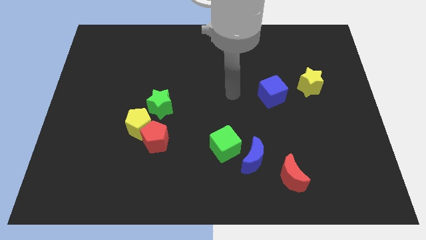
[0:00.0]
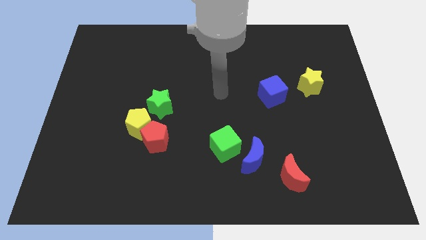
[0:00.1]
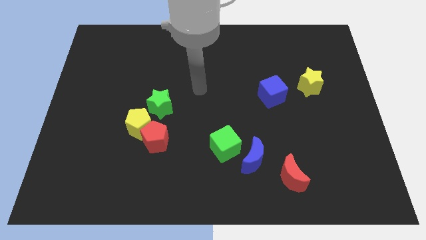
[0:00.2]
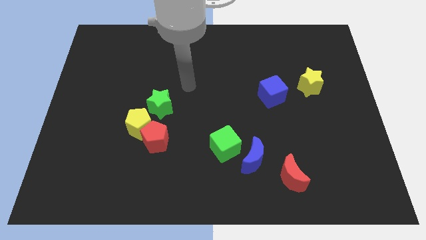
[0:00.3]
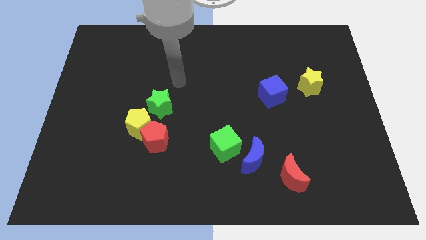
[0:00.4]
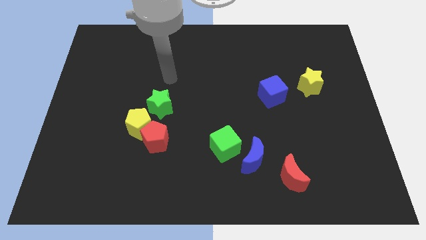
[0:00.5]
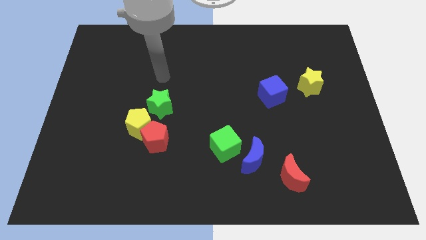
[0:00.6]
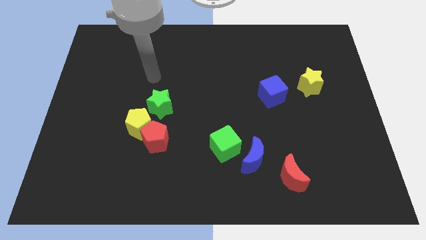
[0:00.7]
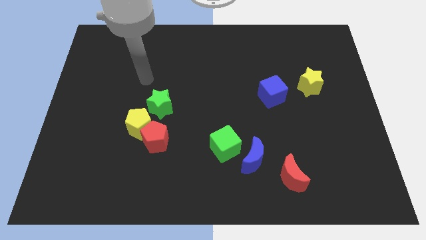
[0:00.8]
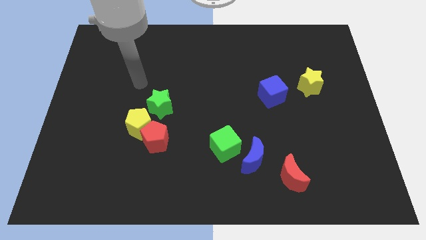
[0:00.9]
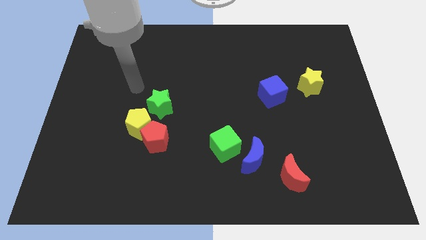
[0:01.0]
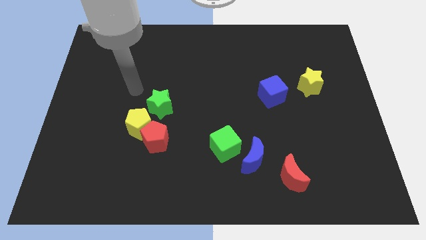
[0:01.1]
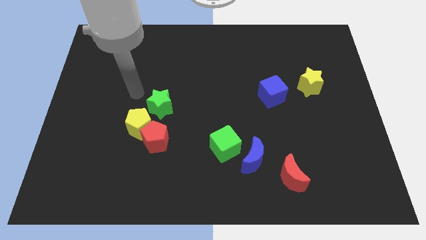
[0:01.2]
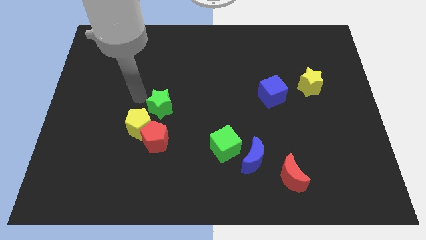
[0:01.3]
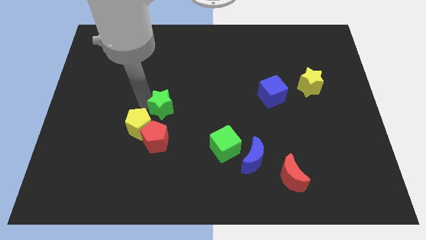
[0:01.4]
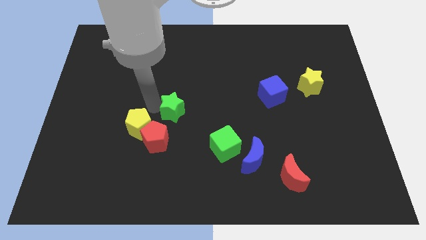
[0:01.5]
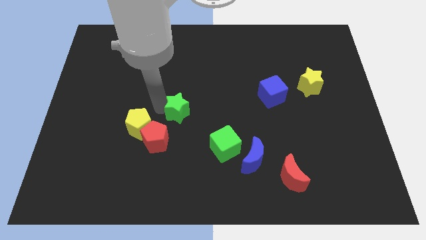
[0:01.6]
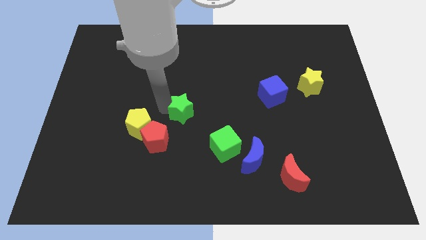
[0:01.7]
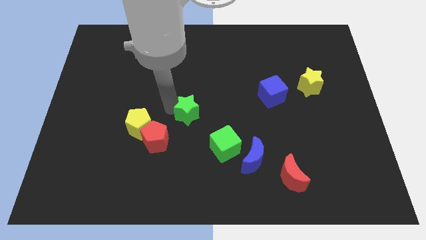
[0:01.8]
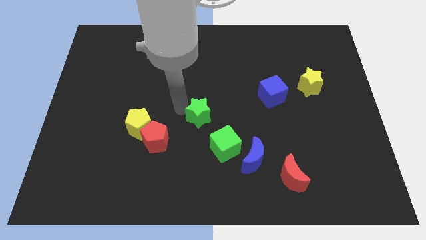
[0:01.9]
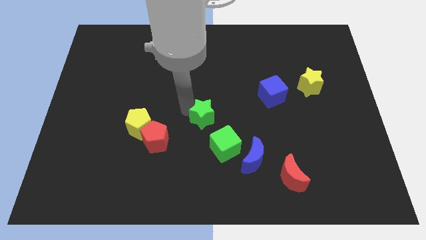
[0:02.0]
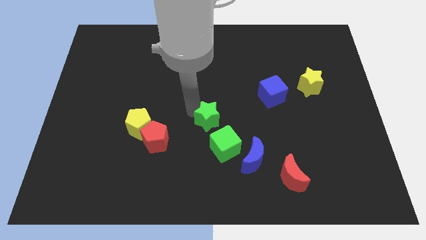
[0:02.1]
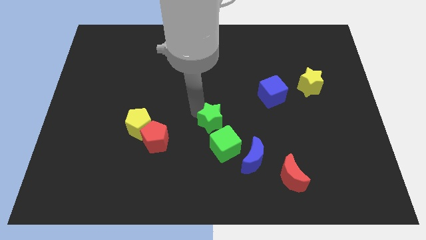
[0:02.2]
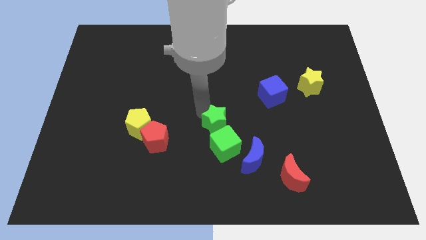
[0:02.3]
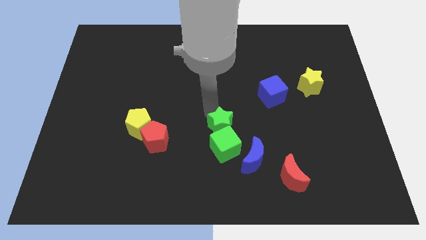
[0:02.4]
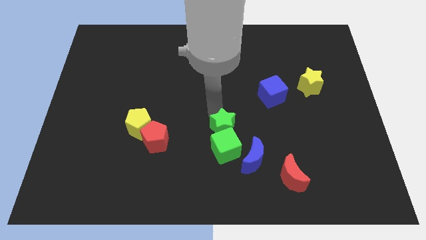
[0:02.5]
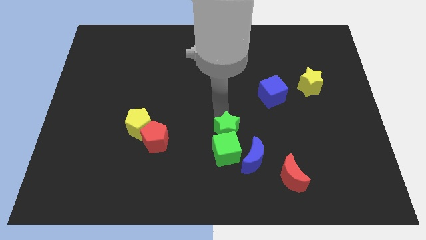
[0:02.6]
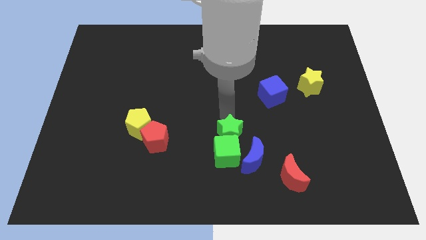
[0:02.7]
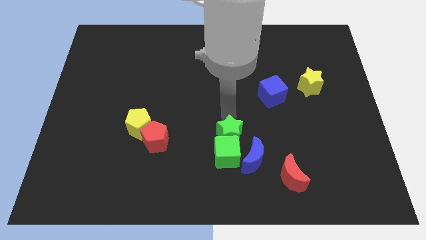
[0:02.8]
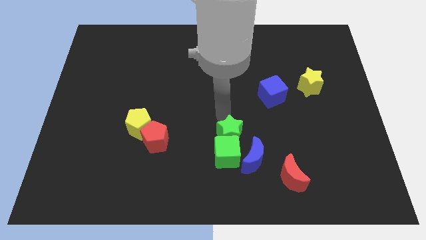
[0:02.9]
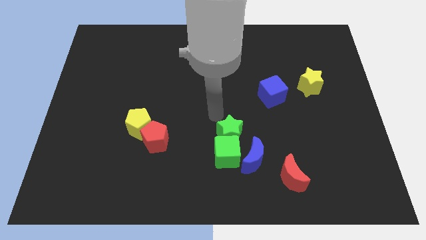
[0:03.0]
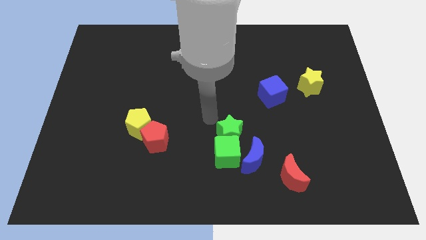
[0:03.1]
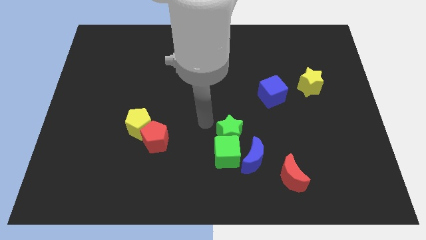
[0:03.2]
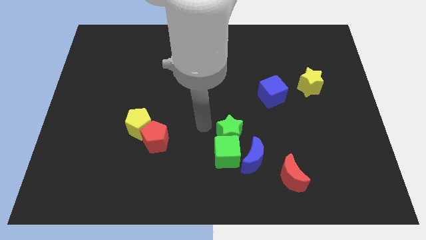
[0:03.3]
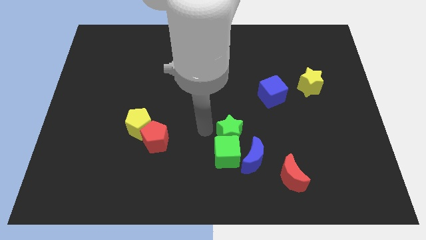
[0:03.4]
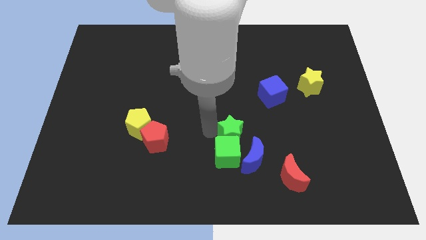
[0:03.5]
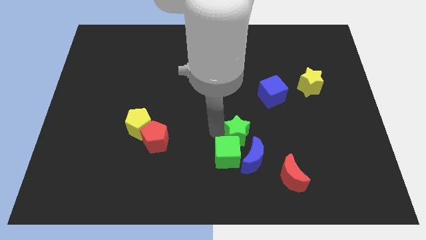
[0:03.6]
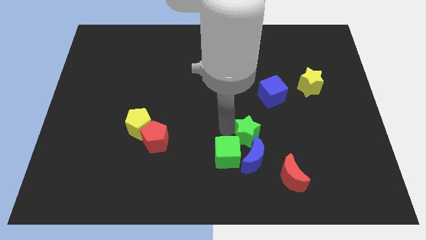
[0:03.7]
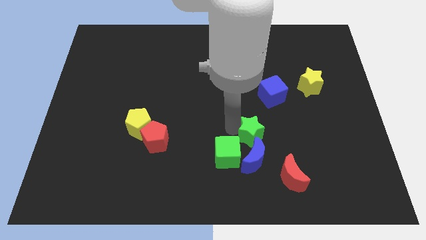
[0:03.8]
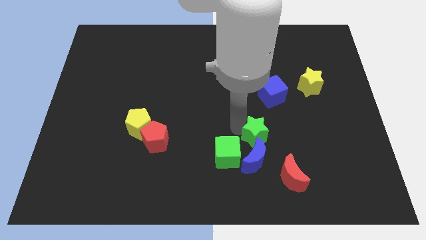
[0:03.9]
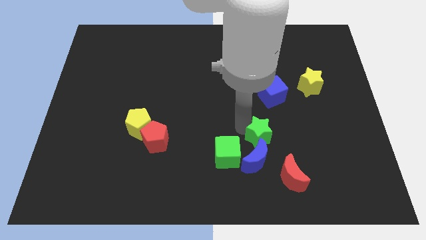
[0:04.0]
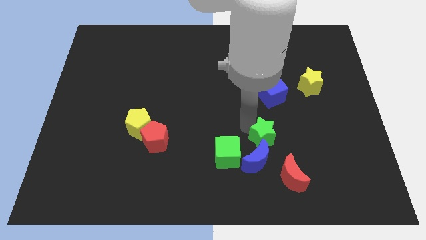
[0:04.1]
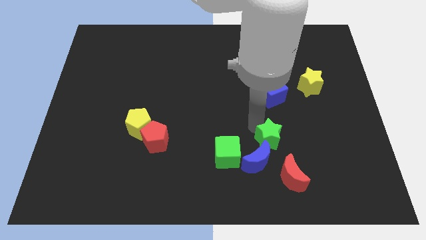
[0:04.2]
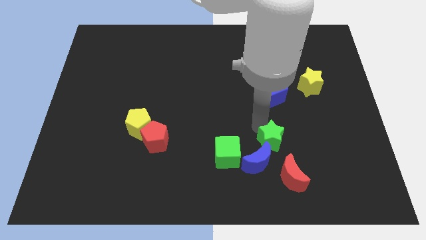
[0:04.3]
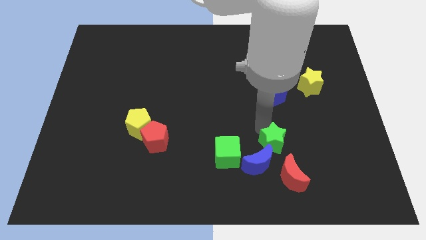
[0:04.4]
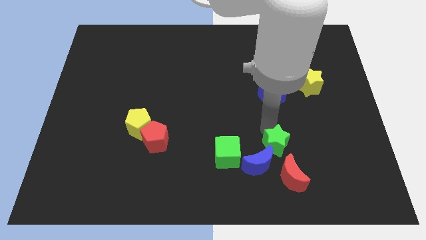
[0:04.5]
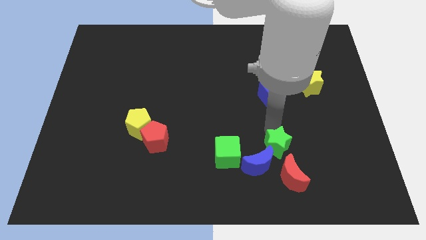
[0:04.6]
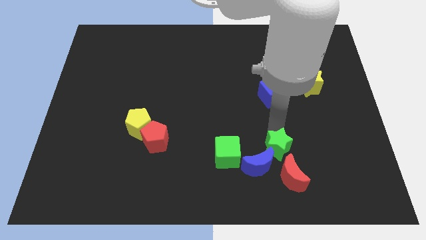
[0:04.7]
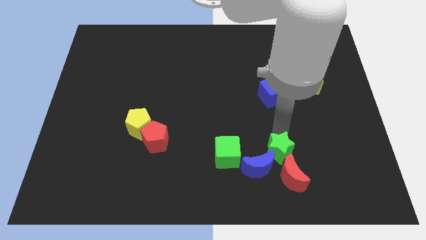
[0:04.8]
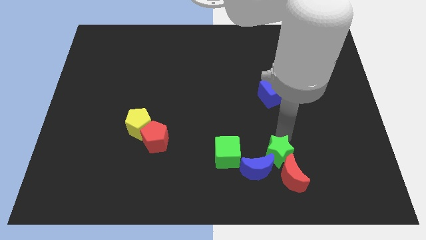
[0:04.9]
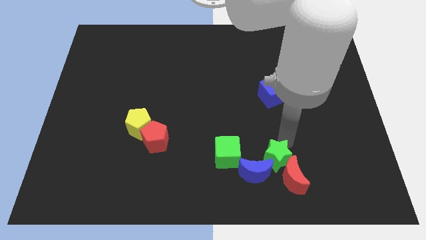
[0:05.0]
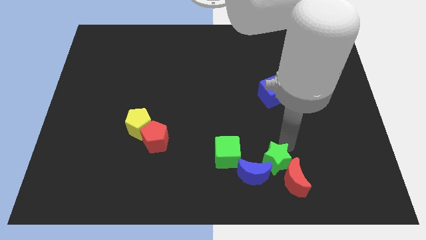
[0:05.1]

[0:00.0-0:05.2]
push the green star to the red moon

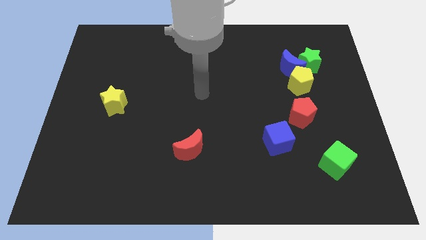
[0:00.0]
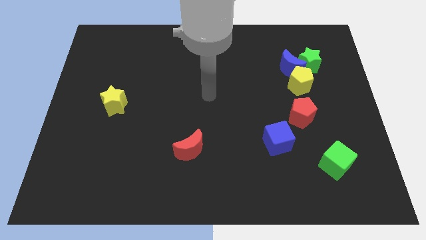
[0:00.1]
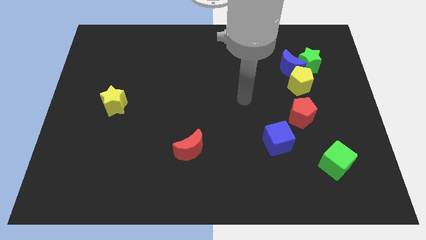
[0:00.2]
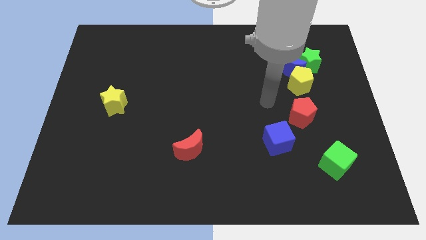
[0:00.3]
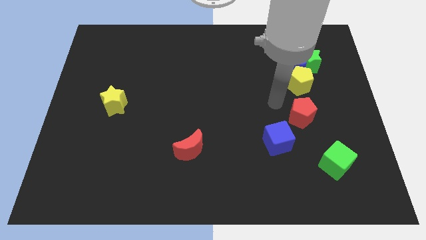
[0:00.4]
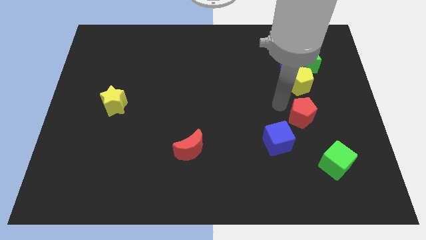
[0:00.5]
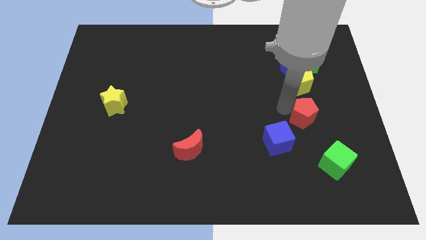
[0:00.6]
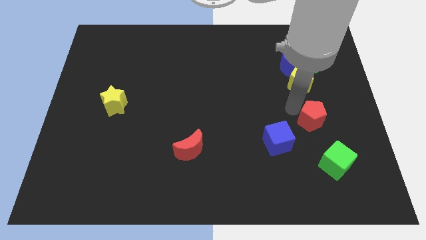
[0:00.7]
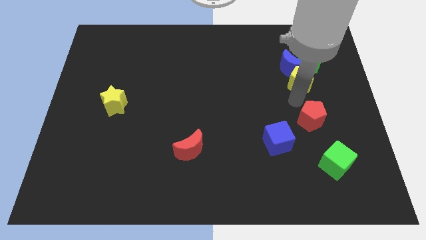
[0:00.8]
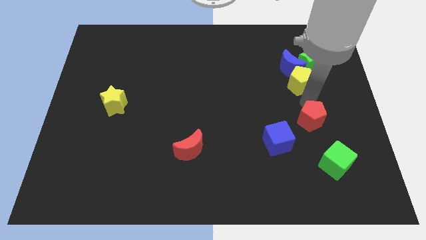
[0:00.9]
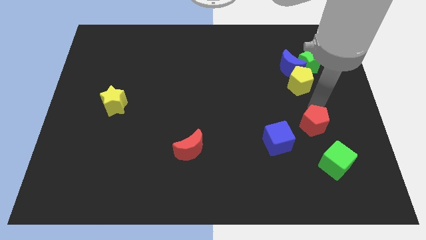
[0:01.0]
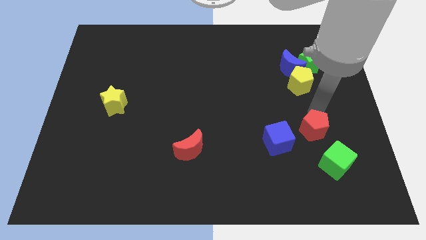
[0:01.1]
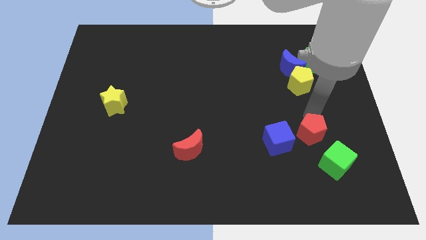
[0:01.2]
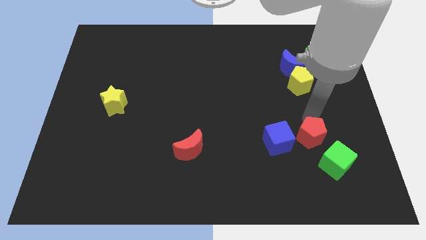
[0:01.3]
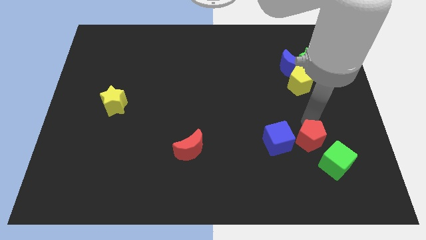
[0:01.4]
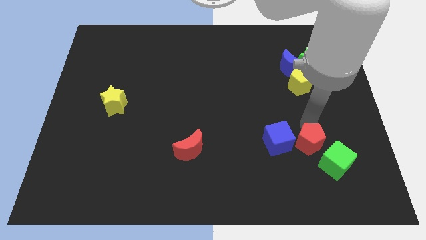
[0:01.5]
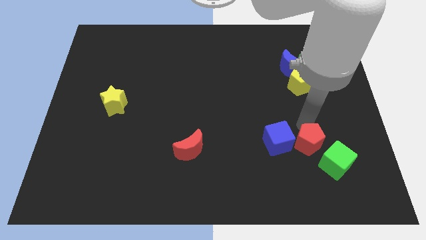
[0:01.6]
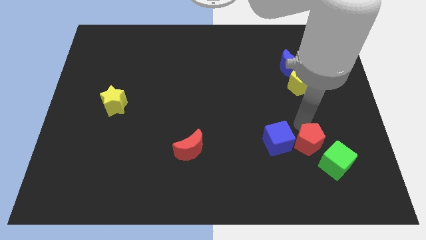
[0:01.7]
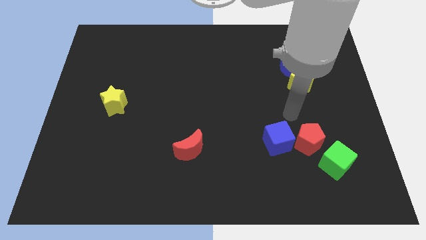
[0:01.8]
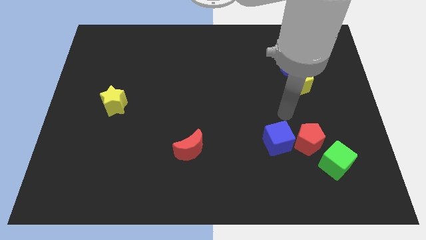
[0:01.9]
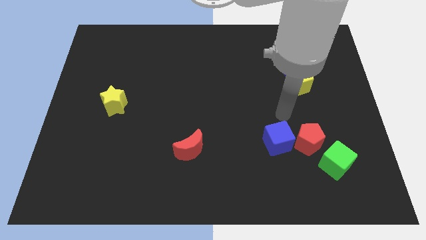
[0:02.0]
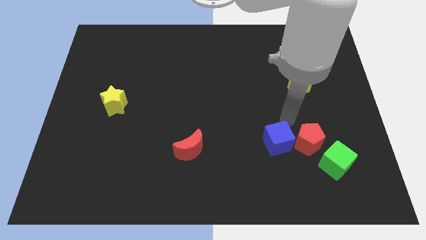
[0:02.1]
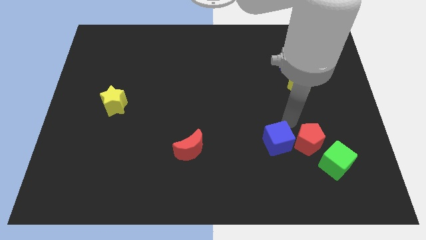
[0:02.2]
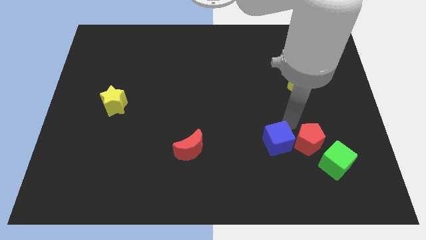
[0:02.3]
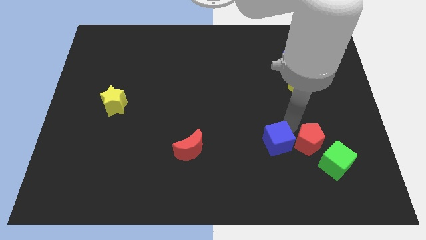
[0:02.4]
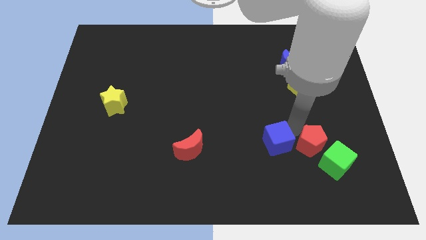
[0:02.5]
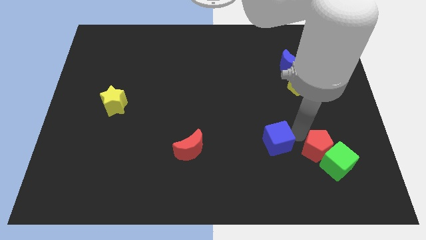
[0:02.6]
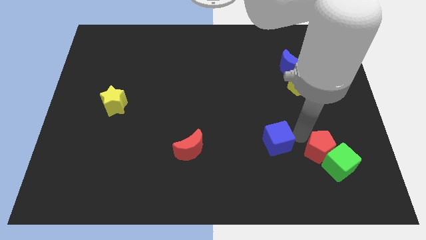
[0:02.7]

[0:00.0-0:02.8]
push the red pentagon next to the green cube

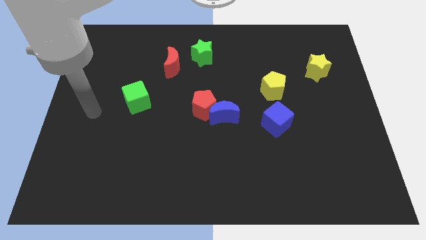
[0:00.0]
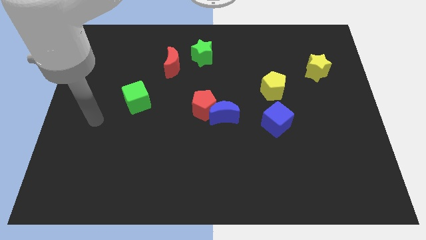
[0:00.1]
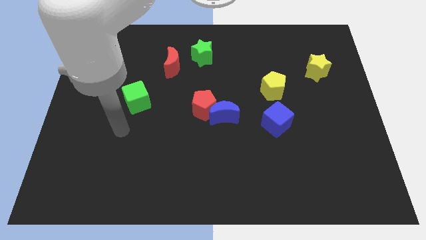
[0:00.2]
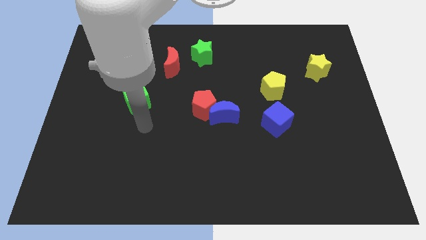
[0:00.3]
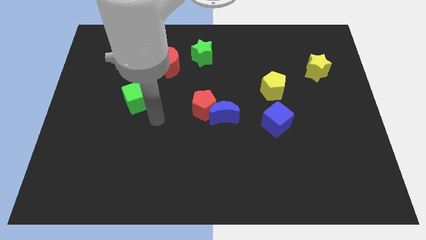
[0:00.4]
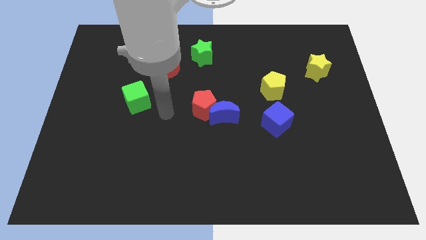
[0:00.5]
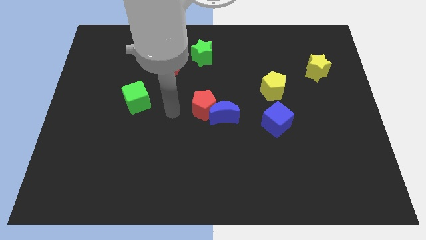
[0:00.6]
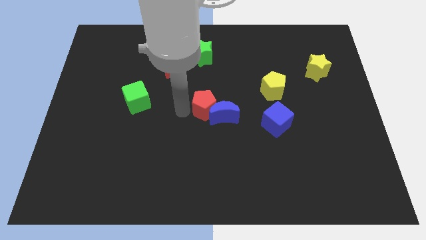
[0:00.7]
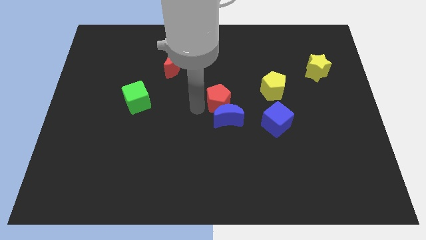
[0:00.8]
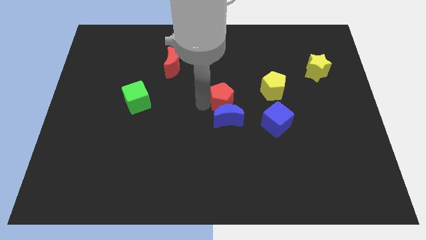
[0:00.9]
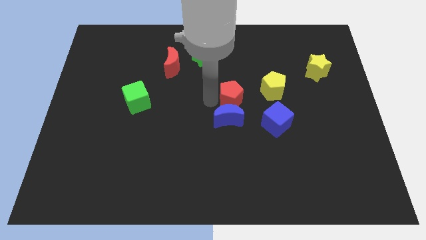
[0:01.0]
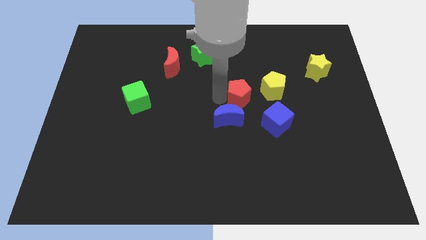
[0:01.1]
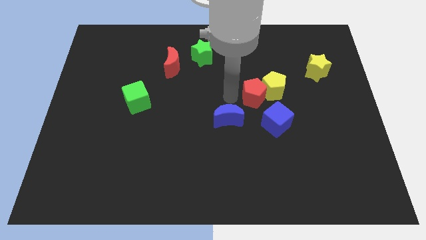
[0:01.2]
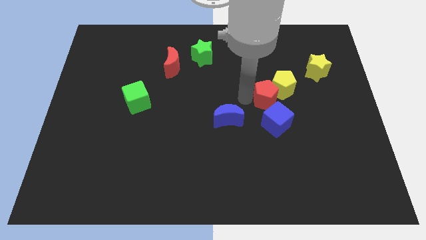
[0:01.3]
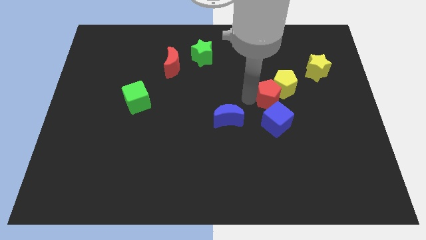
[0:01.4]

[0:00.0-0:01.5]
move the red pentagon to the yellow pentagon
